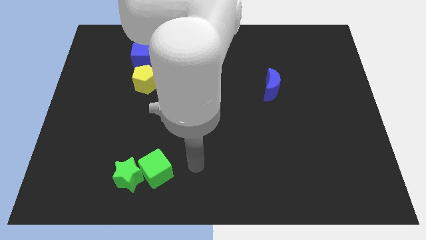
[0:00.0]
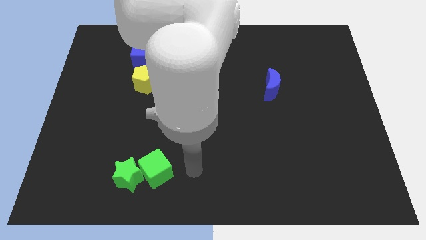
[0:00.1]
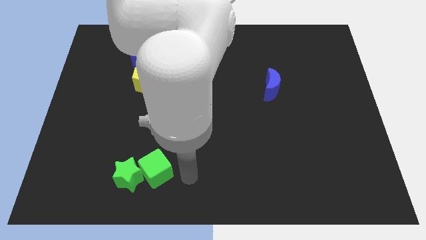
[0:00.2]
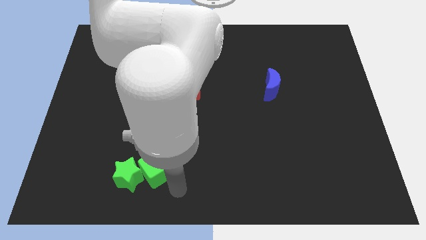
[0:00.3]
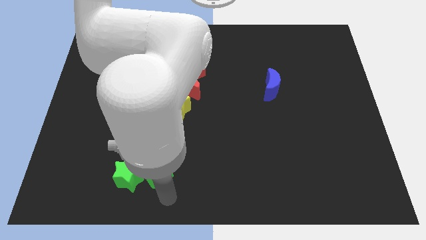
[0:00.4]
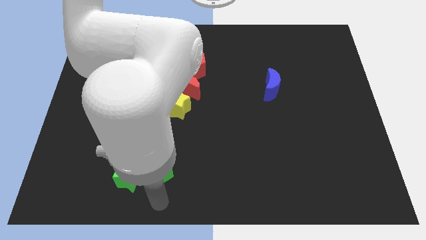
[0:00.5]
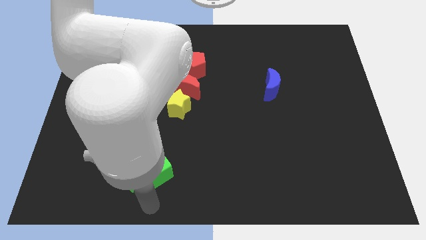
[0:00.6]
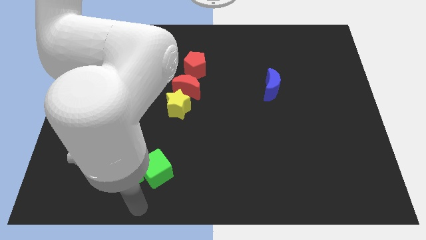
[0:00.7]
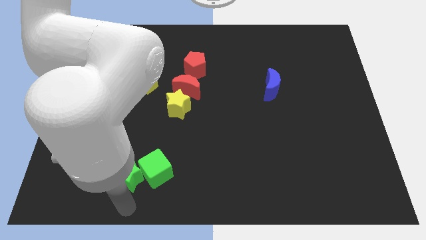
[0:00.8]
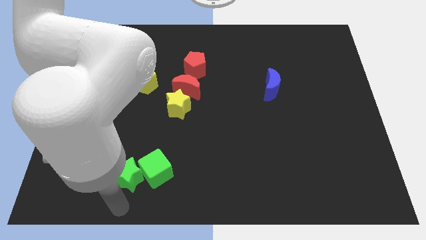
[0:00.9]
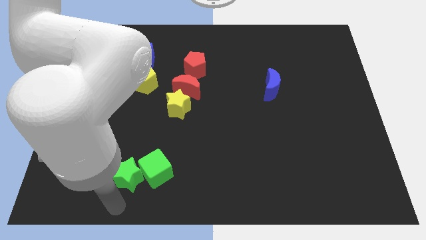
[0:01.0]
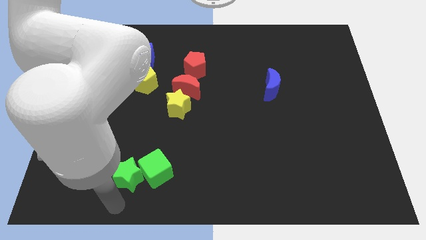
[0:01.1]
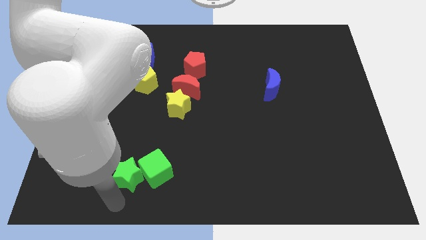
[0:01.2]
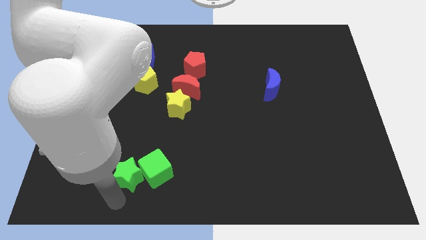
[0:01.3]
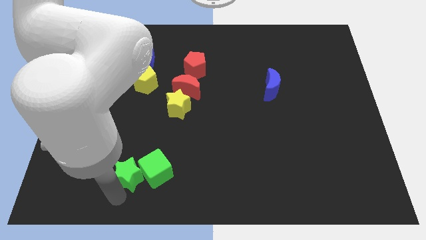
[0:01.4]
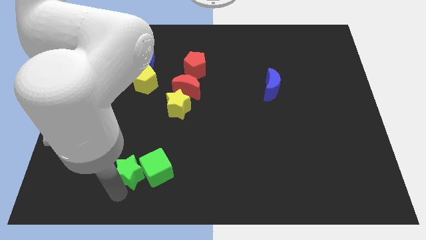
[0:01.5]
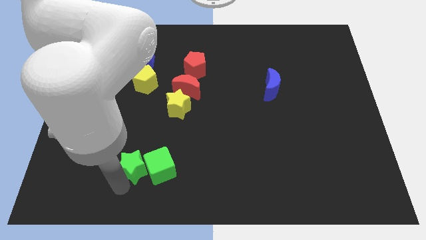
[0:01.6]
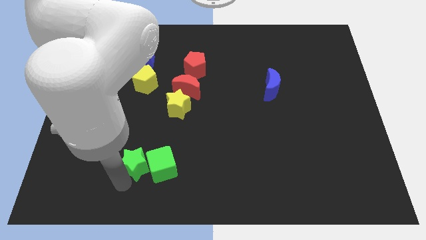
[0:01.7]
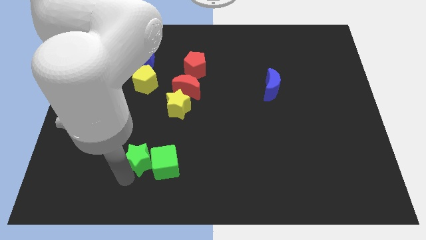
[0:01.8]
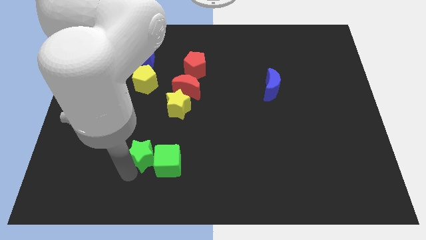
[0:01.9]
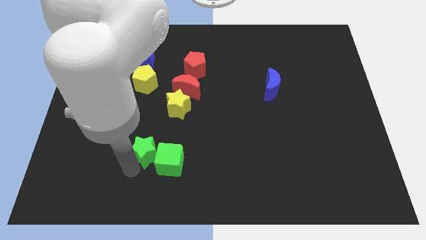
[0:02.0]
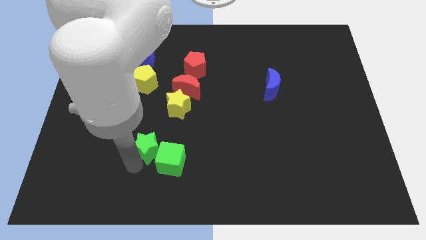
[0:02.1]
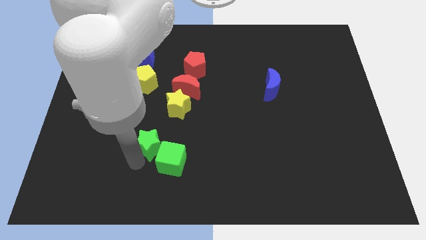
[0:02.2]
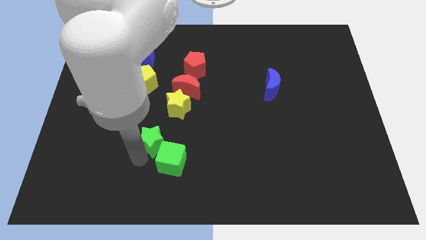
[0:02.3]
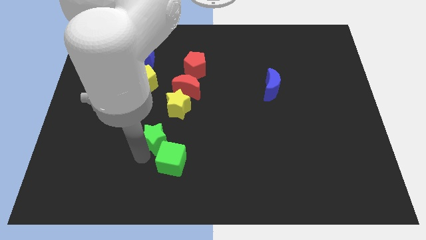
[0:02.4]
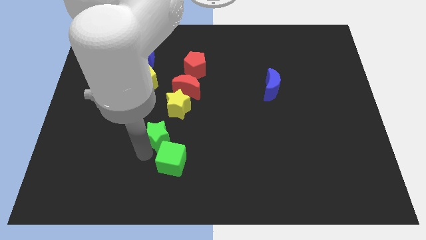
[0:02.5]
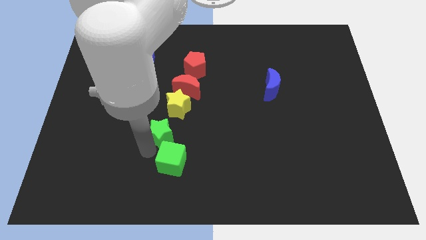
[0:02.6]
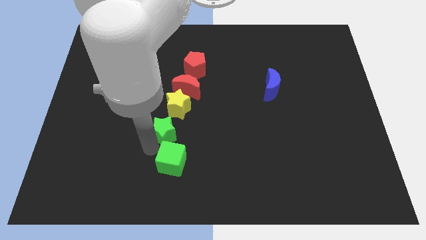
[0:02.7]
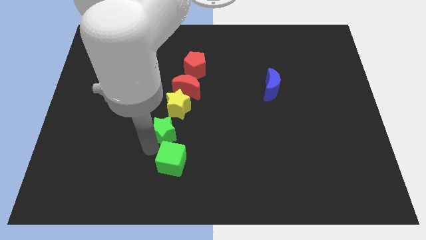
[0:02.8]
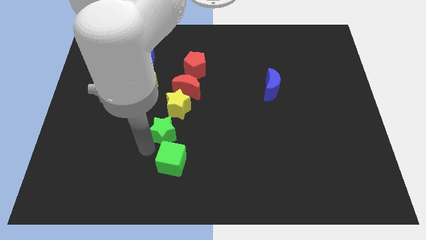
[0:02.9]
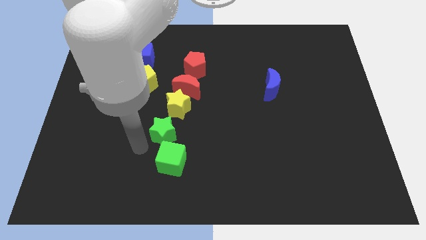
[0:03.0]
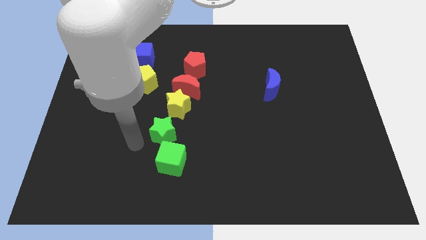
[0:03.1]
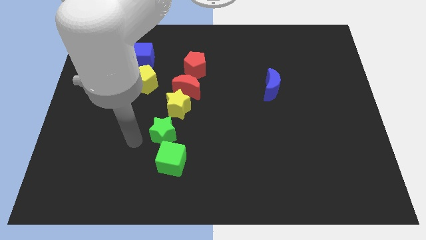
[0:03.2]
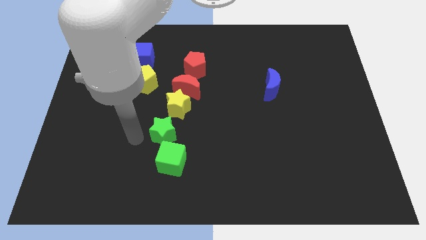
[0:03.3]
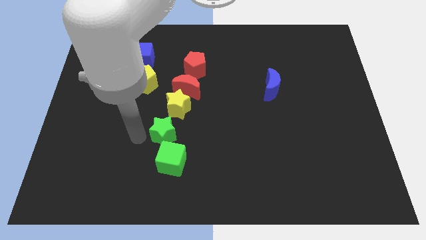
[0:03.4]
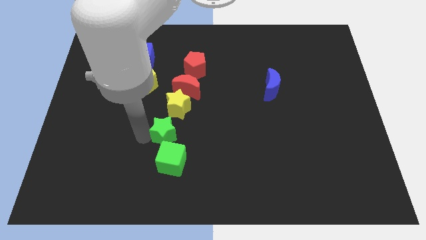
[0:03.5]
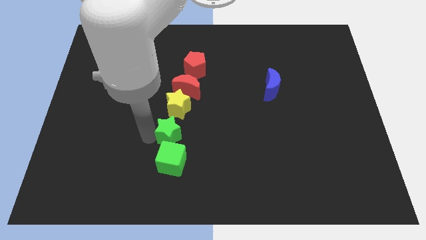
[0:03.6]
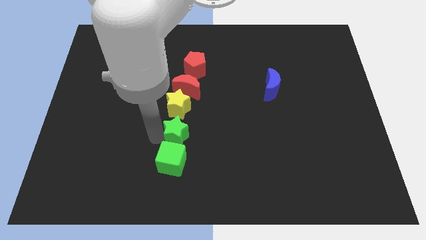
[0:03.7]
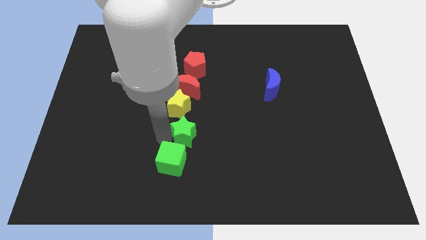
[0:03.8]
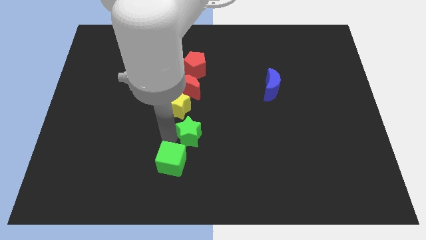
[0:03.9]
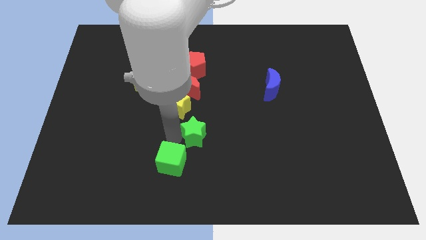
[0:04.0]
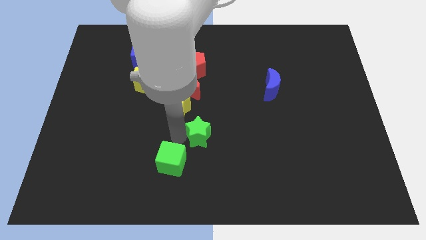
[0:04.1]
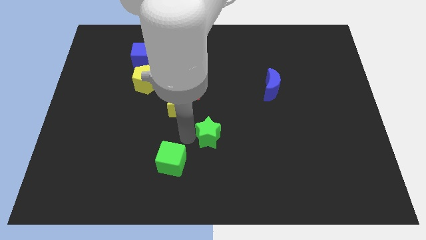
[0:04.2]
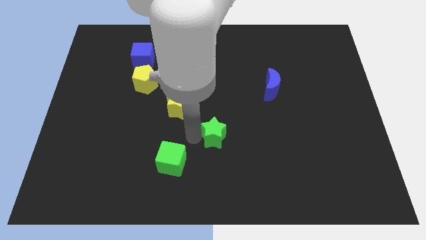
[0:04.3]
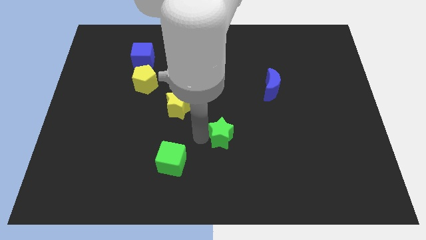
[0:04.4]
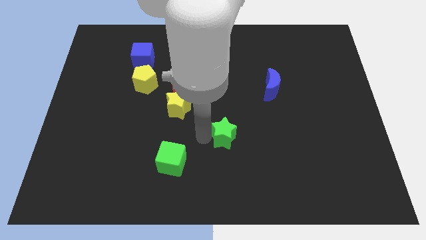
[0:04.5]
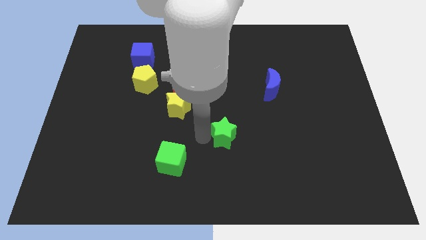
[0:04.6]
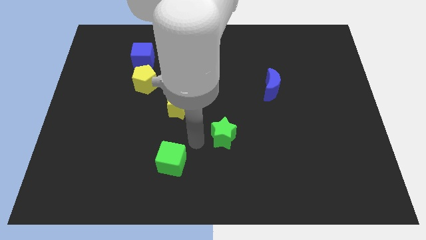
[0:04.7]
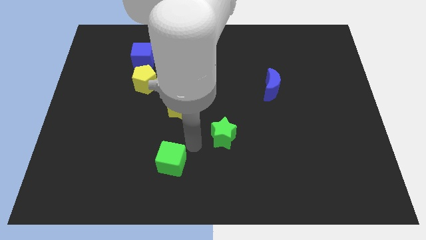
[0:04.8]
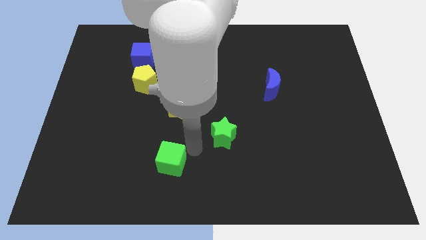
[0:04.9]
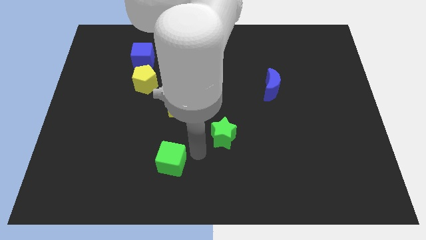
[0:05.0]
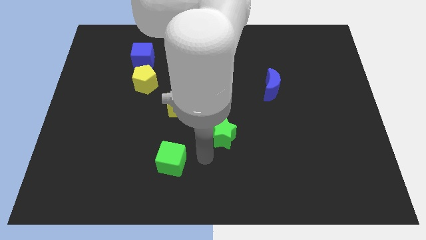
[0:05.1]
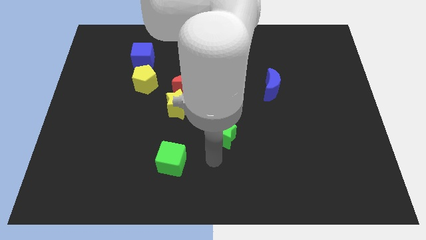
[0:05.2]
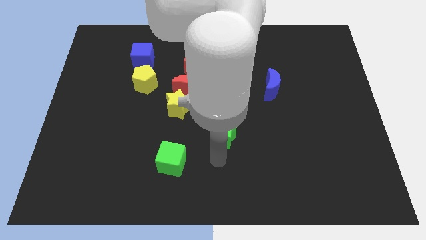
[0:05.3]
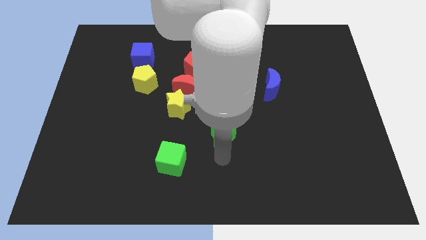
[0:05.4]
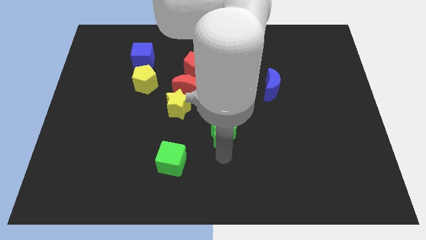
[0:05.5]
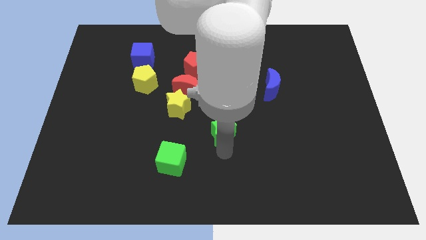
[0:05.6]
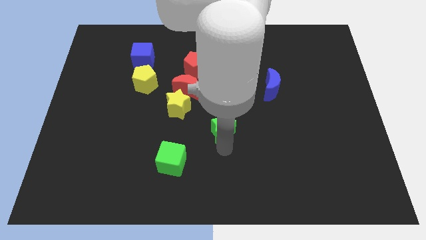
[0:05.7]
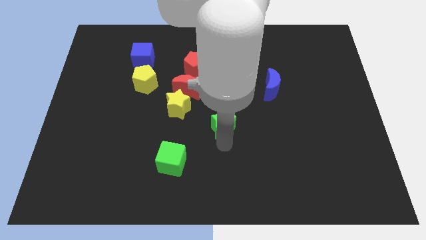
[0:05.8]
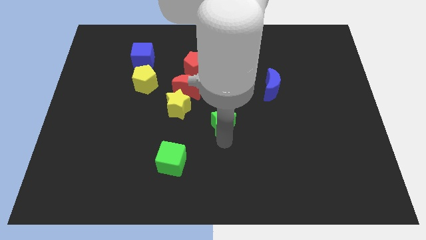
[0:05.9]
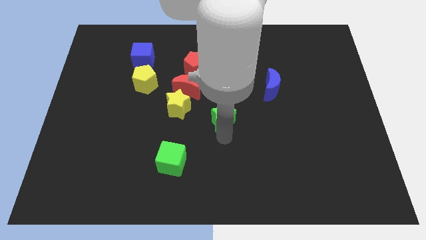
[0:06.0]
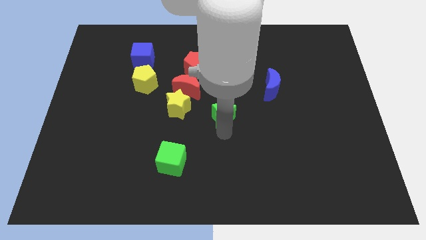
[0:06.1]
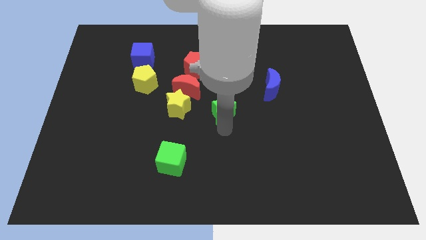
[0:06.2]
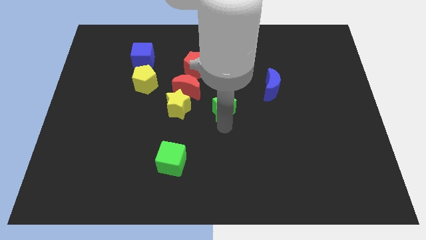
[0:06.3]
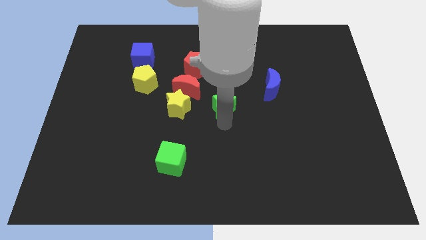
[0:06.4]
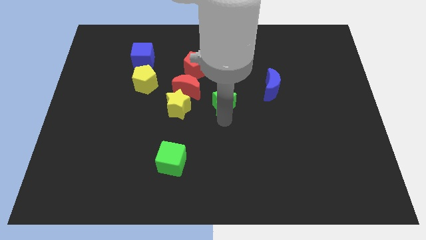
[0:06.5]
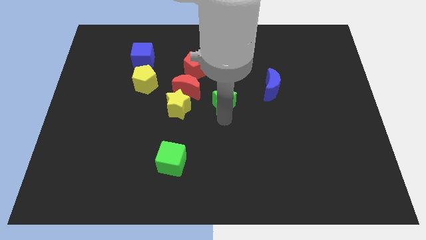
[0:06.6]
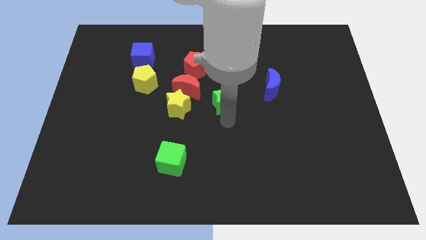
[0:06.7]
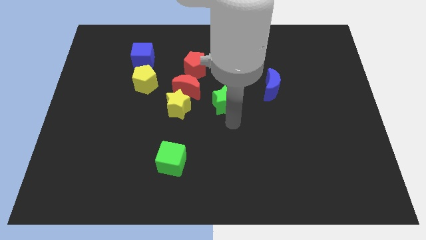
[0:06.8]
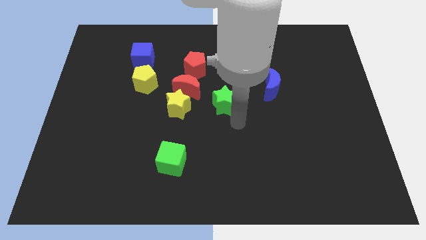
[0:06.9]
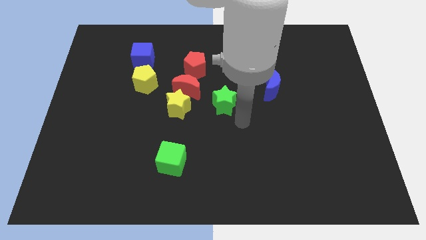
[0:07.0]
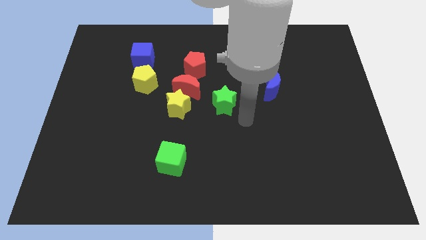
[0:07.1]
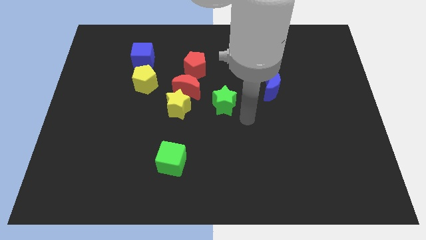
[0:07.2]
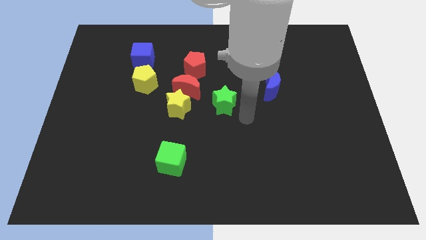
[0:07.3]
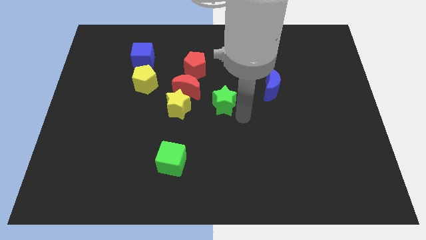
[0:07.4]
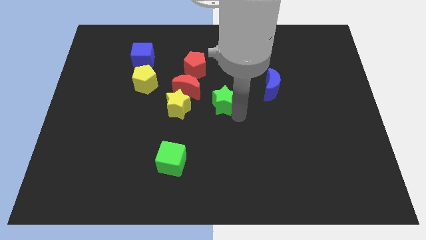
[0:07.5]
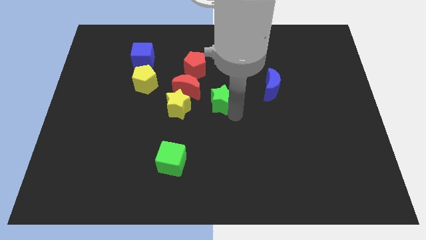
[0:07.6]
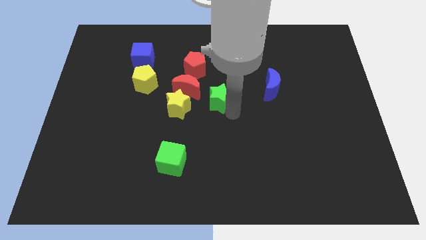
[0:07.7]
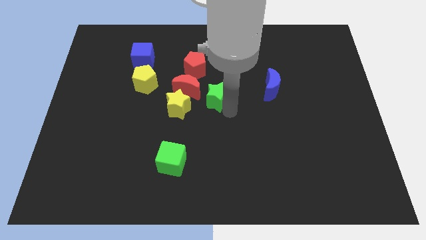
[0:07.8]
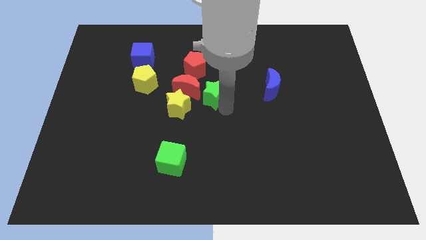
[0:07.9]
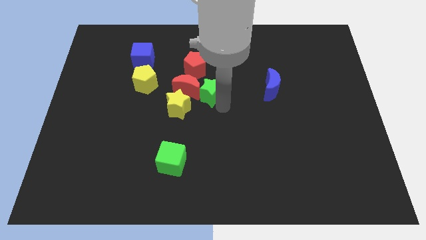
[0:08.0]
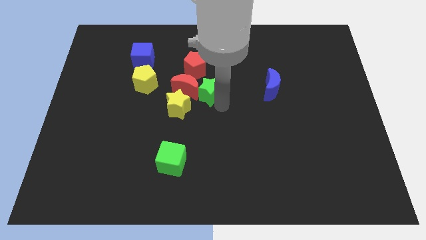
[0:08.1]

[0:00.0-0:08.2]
slide the green star to the red moon

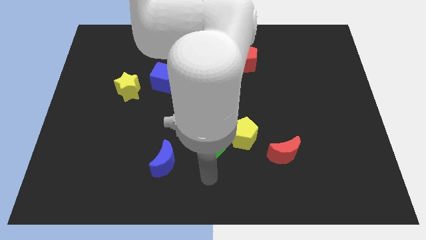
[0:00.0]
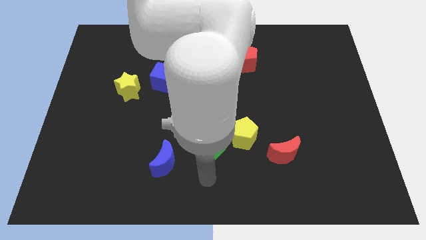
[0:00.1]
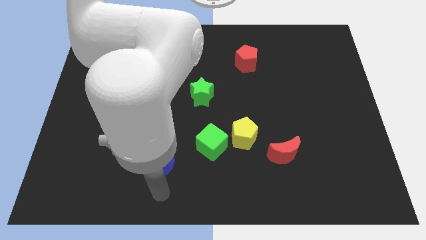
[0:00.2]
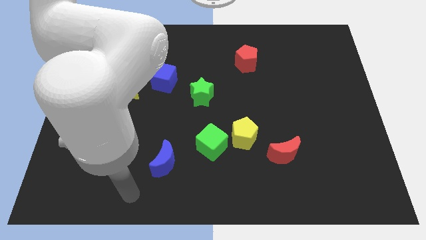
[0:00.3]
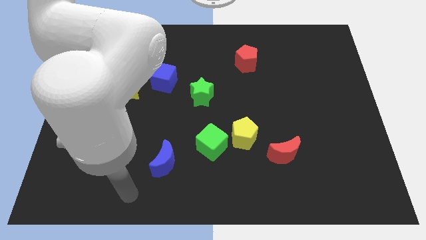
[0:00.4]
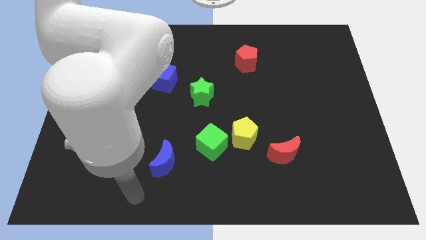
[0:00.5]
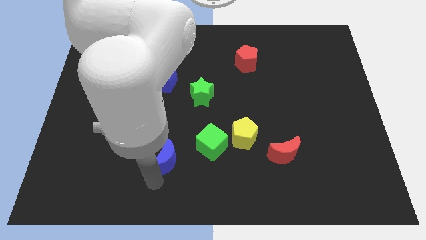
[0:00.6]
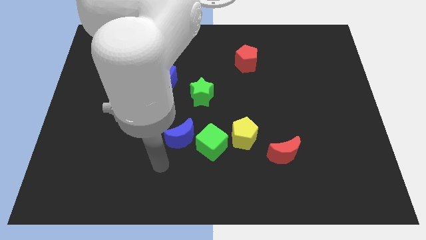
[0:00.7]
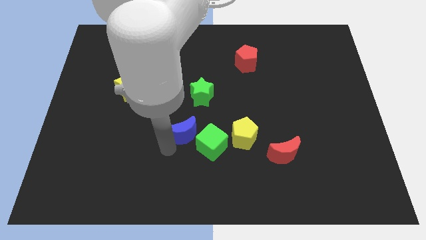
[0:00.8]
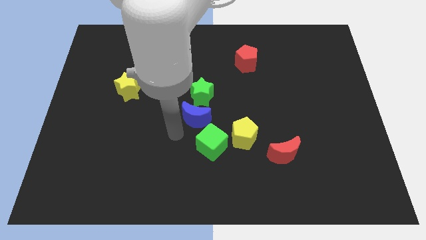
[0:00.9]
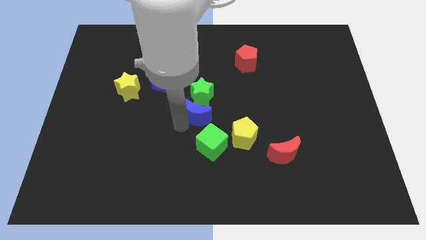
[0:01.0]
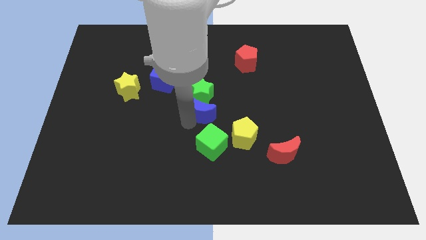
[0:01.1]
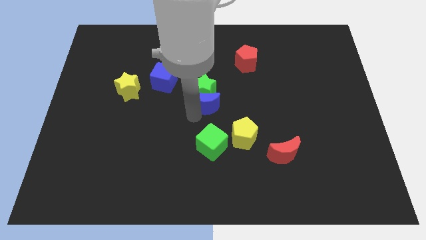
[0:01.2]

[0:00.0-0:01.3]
slide the blue moon next to the green star
